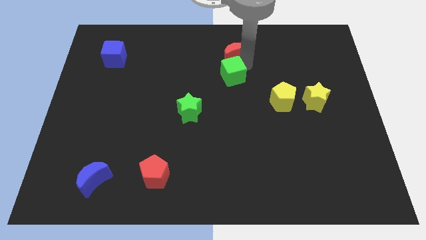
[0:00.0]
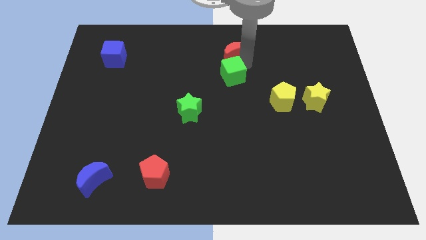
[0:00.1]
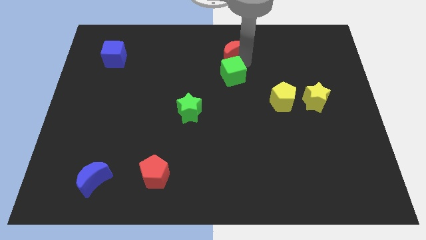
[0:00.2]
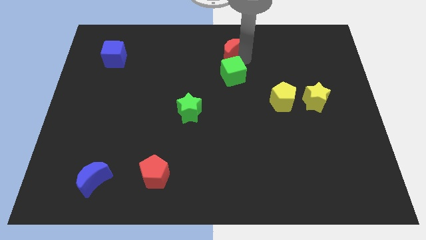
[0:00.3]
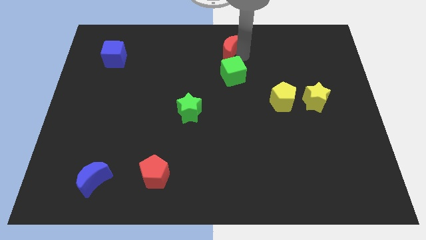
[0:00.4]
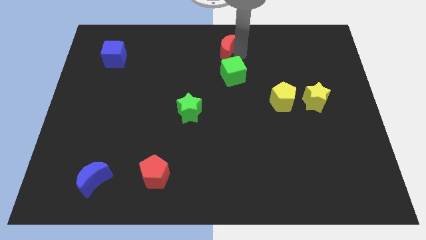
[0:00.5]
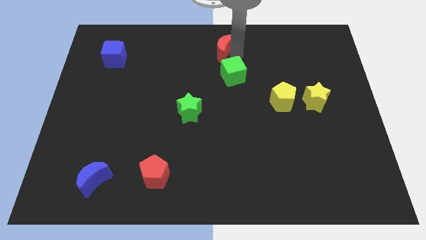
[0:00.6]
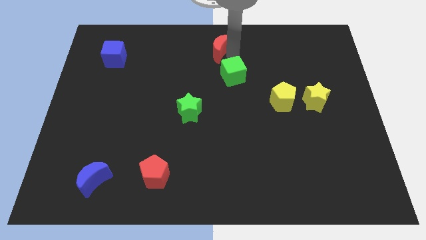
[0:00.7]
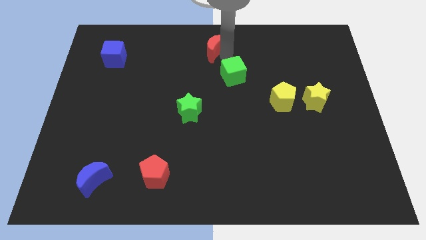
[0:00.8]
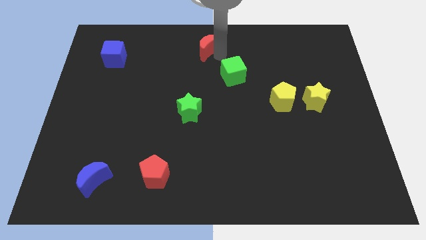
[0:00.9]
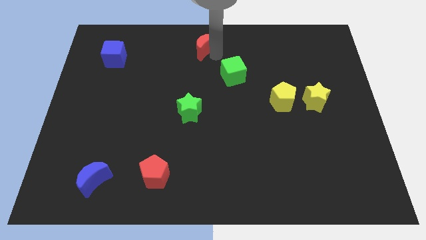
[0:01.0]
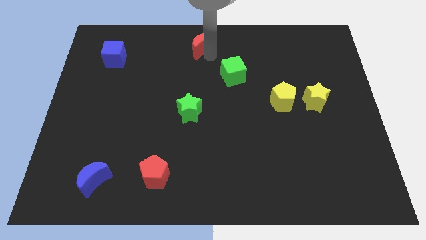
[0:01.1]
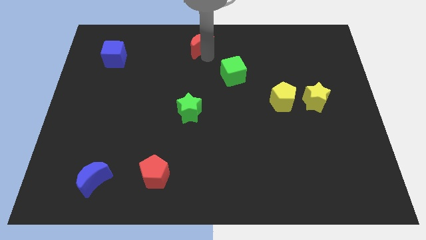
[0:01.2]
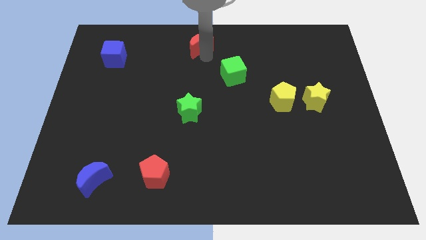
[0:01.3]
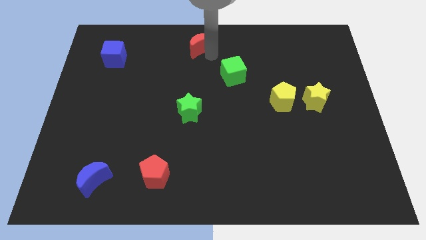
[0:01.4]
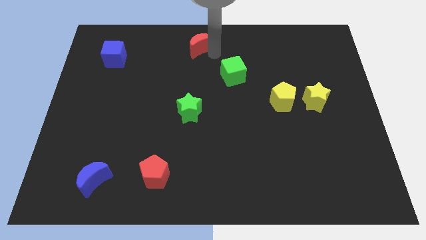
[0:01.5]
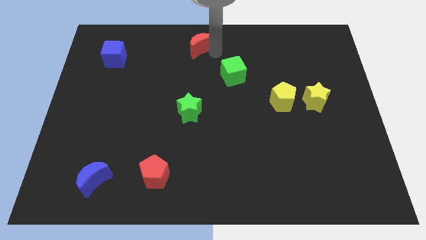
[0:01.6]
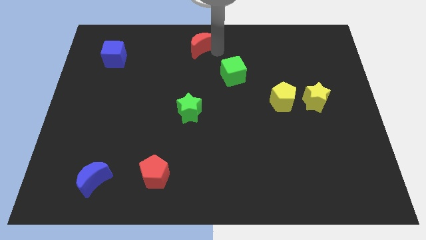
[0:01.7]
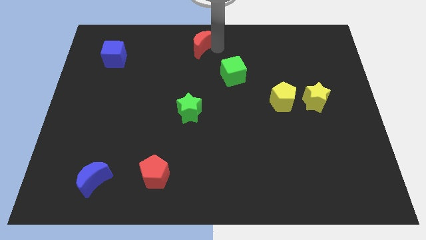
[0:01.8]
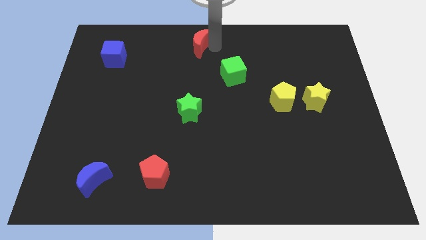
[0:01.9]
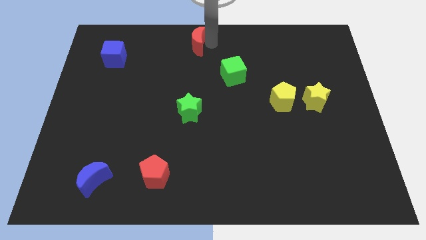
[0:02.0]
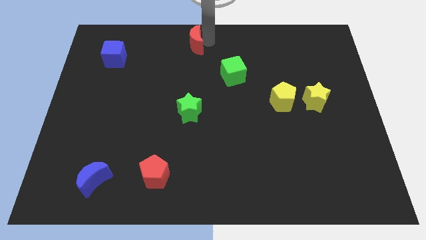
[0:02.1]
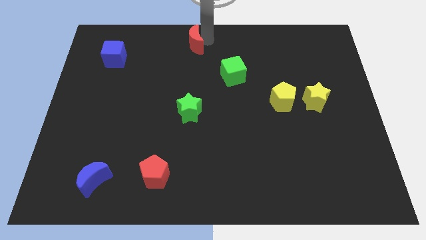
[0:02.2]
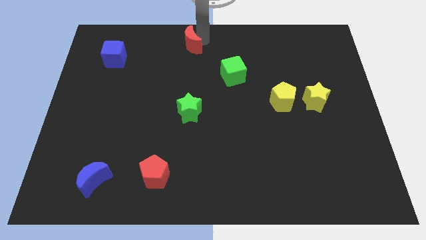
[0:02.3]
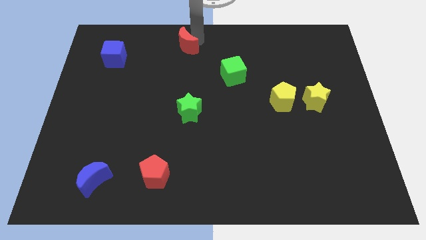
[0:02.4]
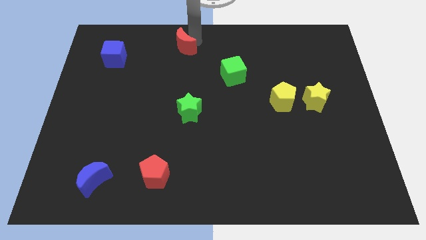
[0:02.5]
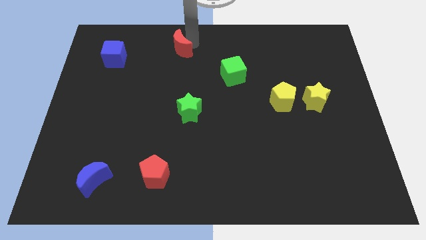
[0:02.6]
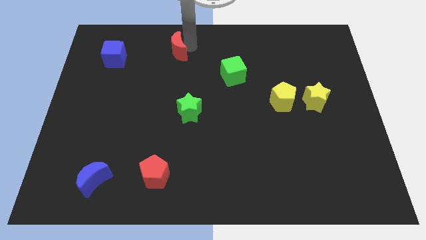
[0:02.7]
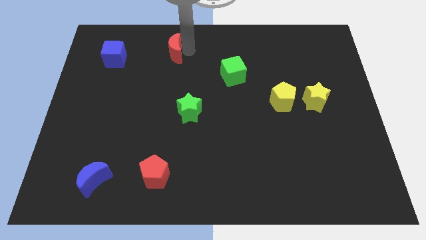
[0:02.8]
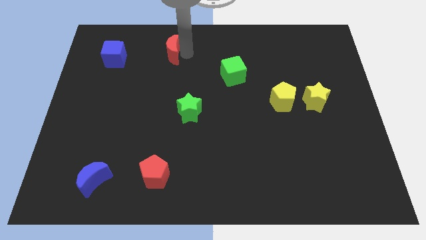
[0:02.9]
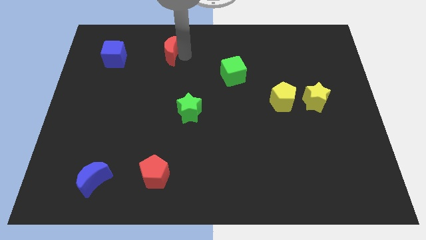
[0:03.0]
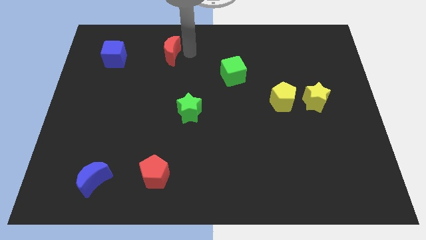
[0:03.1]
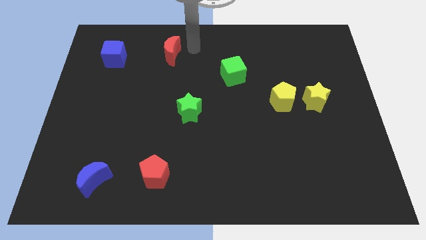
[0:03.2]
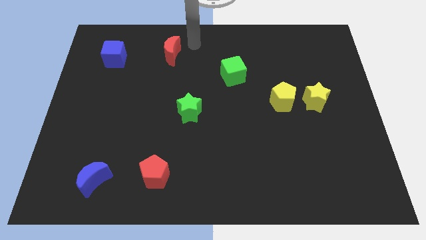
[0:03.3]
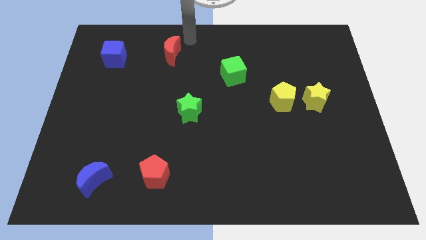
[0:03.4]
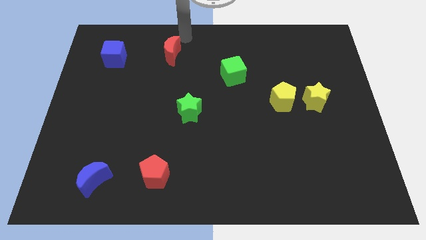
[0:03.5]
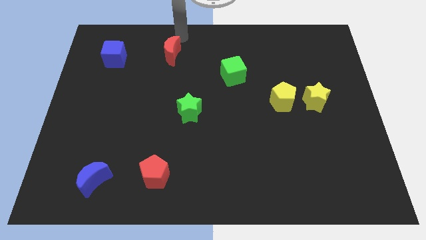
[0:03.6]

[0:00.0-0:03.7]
place the red moon parallel to blue cube

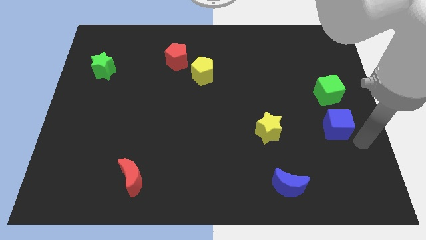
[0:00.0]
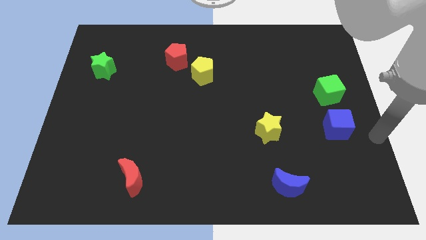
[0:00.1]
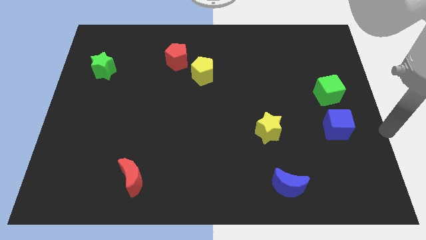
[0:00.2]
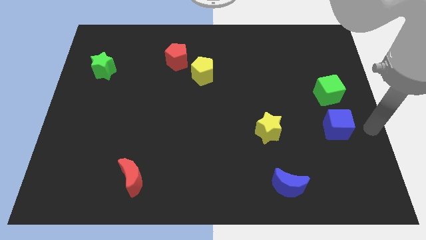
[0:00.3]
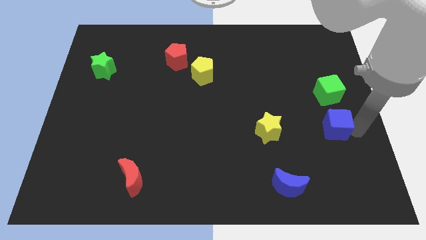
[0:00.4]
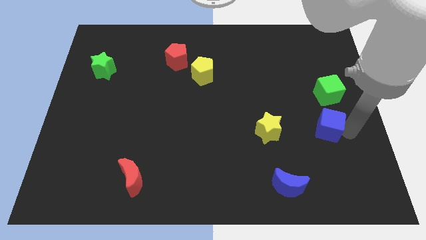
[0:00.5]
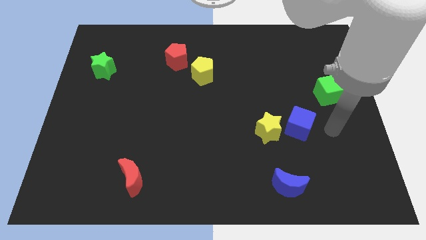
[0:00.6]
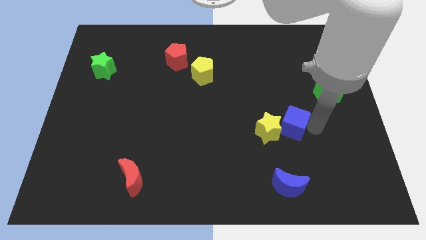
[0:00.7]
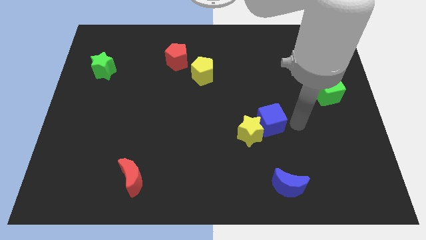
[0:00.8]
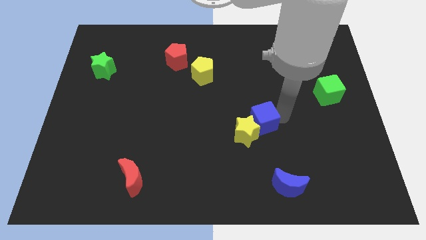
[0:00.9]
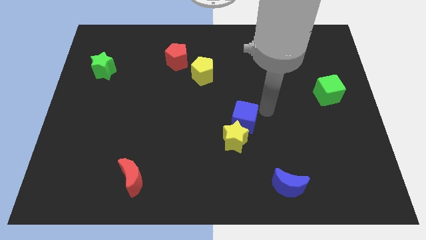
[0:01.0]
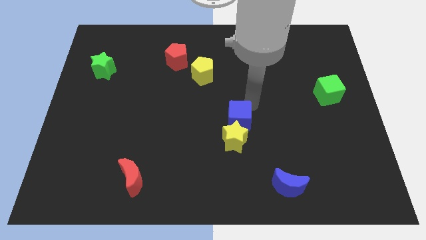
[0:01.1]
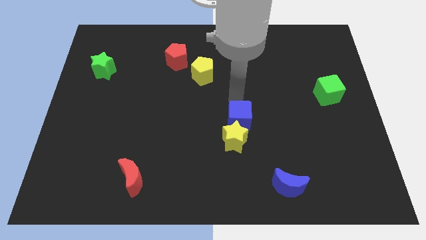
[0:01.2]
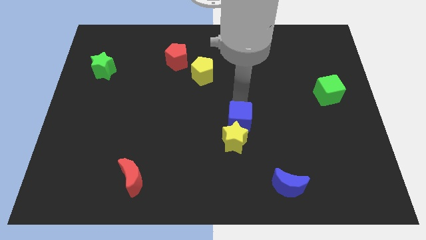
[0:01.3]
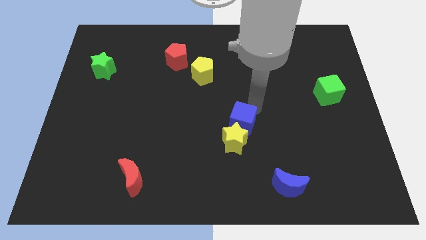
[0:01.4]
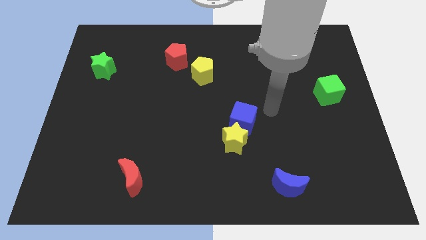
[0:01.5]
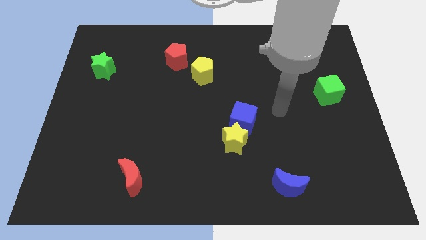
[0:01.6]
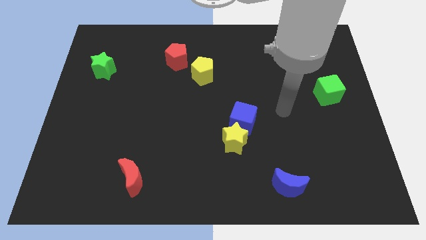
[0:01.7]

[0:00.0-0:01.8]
move blue cube into yellow star

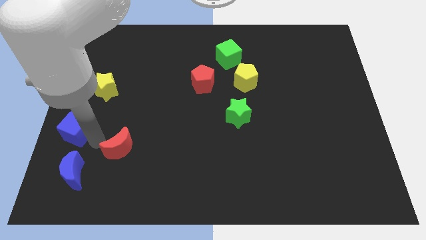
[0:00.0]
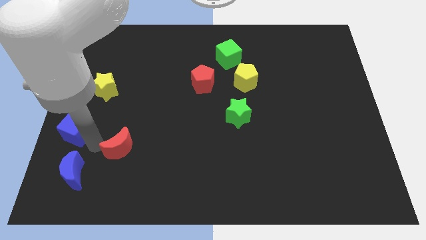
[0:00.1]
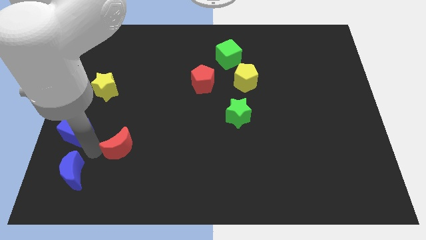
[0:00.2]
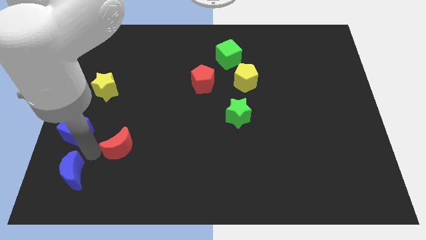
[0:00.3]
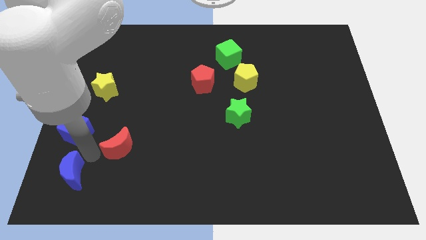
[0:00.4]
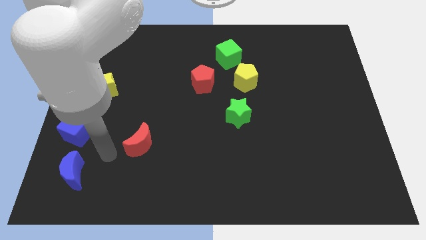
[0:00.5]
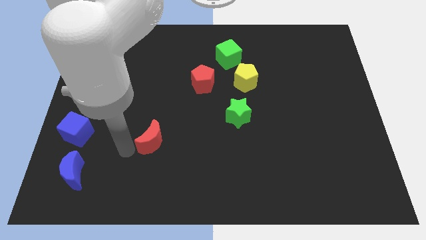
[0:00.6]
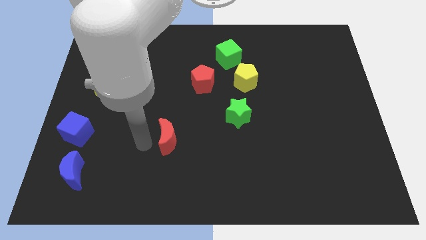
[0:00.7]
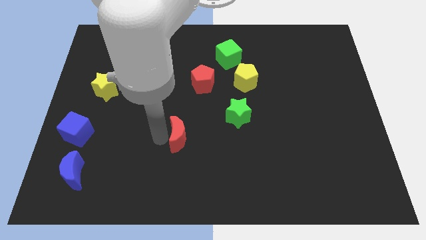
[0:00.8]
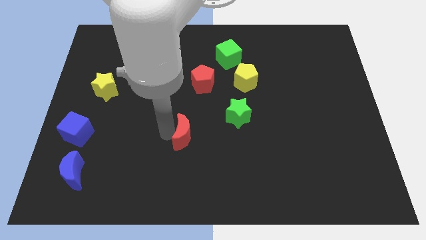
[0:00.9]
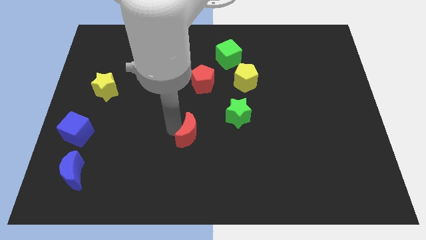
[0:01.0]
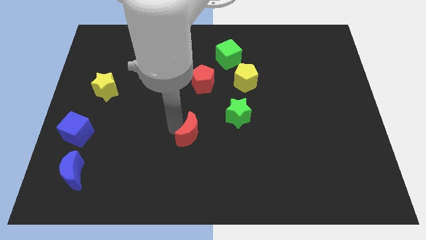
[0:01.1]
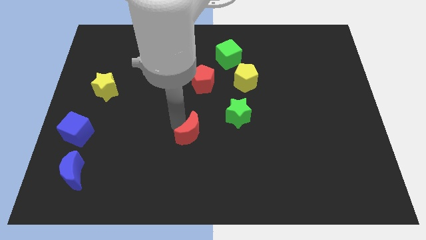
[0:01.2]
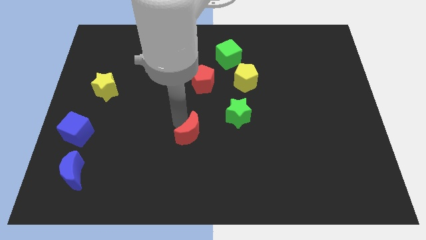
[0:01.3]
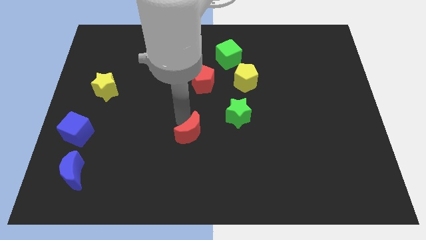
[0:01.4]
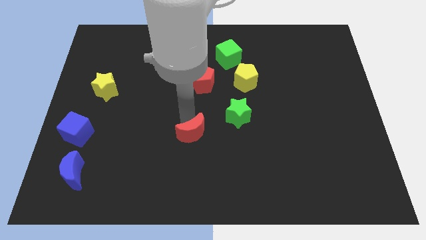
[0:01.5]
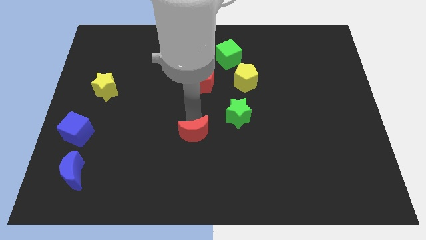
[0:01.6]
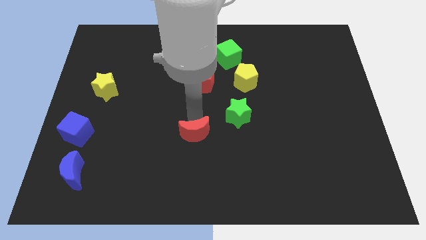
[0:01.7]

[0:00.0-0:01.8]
push the red half moon to the center of the board

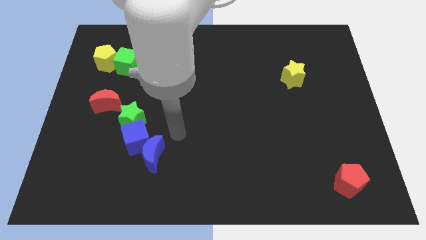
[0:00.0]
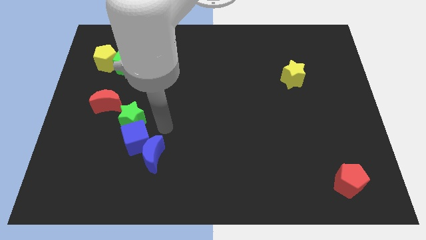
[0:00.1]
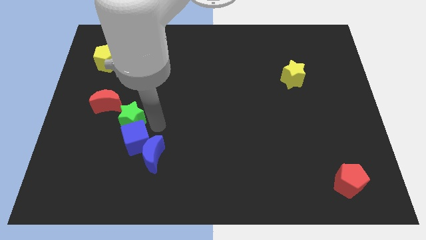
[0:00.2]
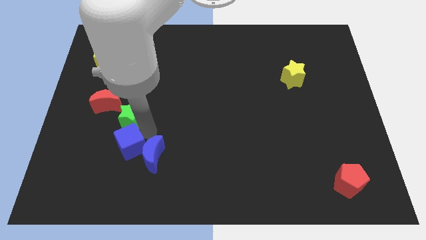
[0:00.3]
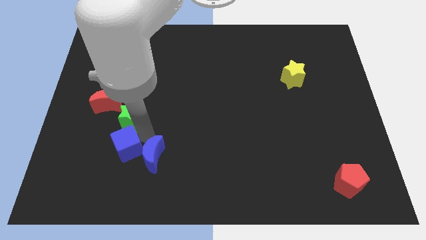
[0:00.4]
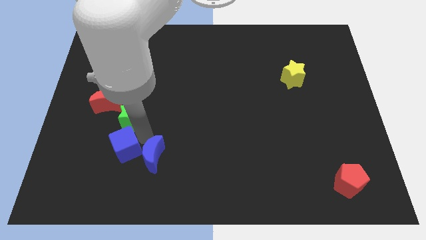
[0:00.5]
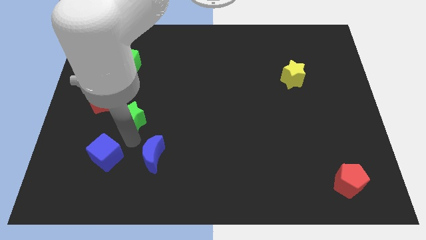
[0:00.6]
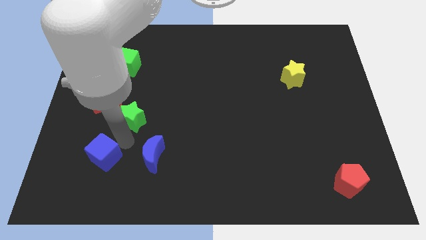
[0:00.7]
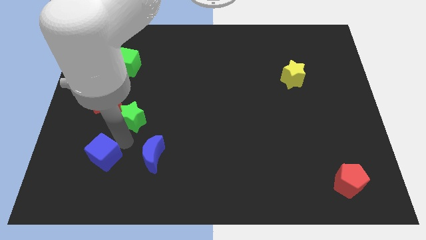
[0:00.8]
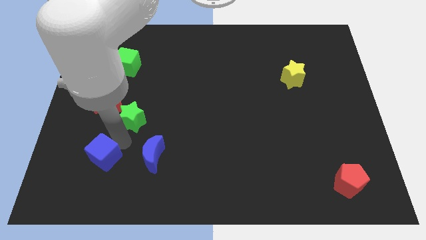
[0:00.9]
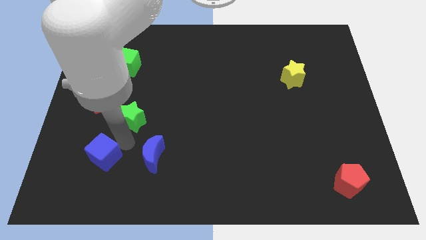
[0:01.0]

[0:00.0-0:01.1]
push the blue cube and make a triangle with the green star and blue moon

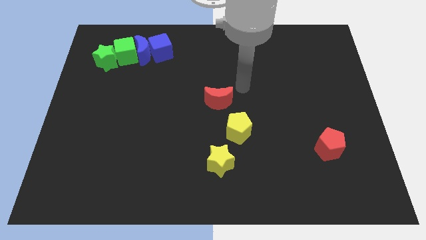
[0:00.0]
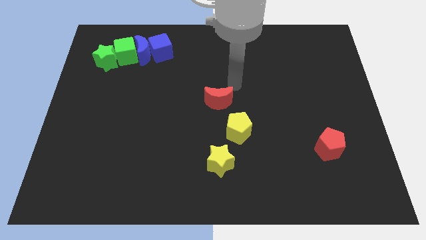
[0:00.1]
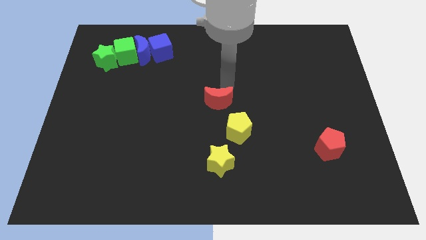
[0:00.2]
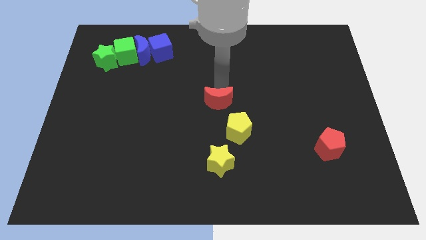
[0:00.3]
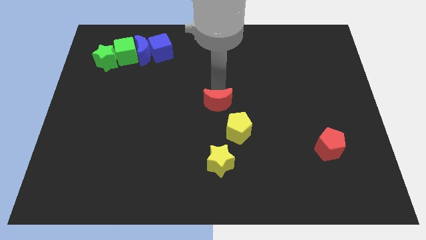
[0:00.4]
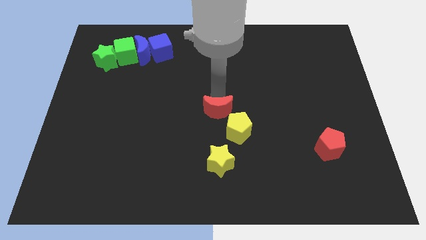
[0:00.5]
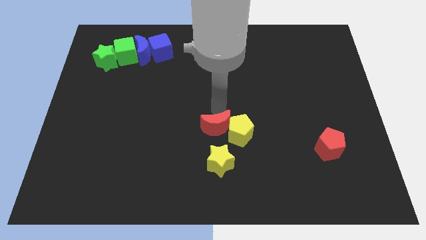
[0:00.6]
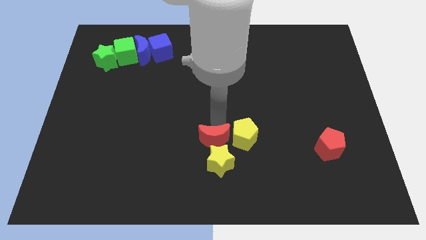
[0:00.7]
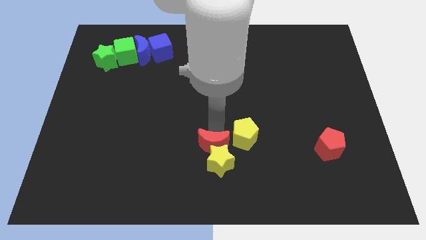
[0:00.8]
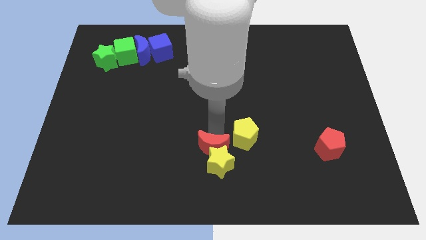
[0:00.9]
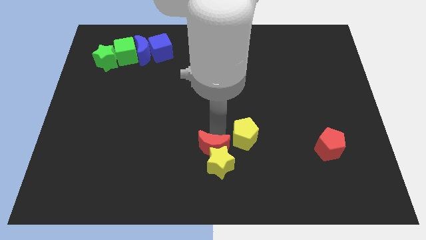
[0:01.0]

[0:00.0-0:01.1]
put the red crescent at the top of the yellow star
